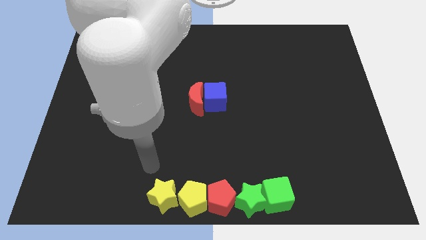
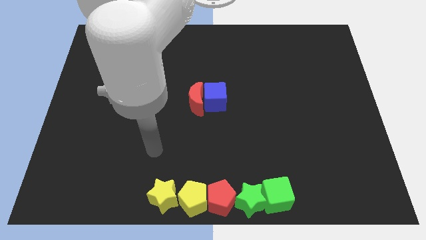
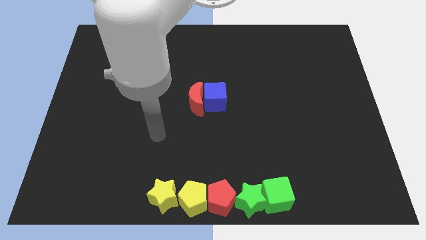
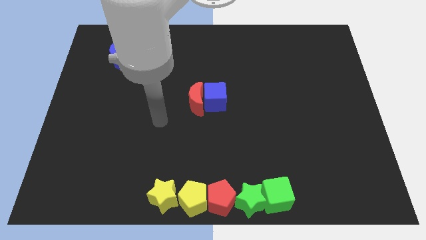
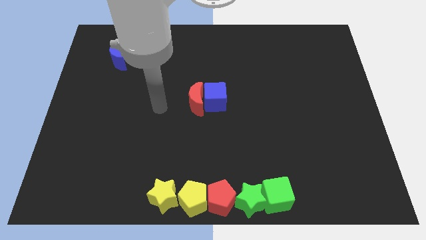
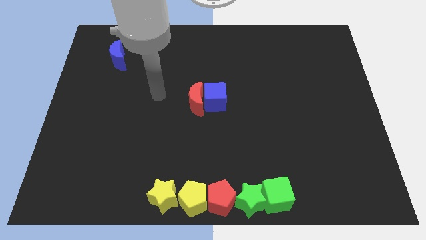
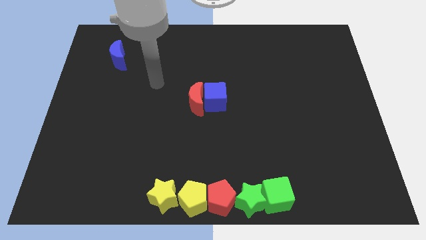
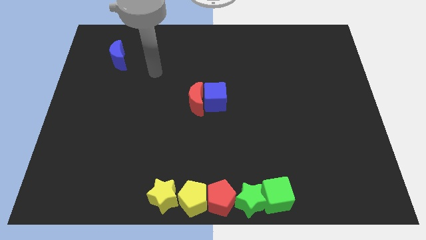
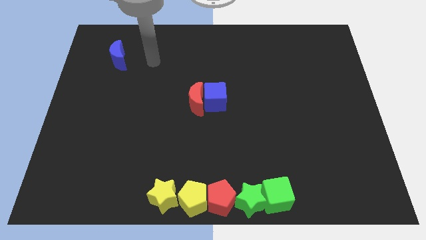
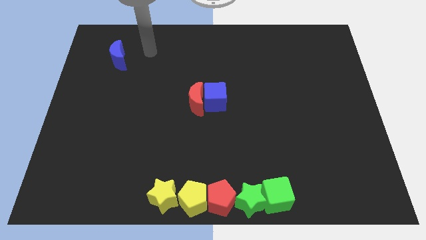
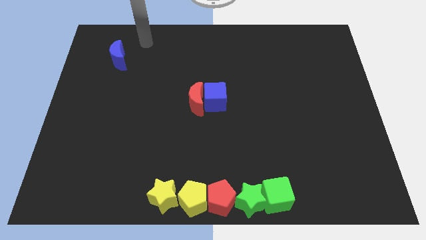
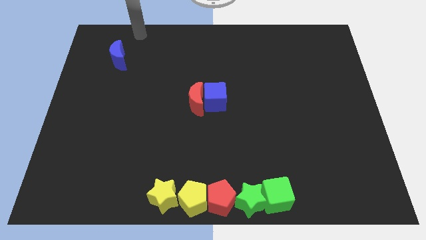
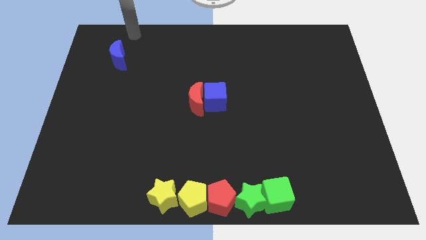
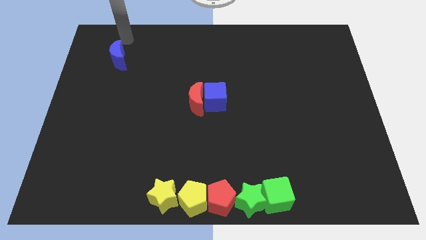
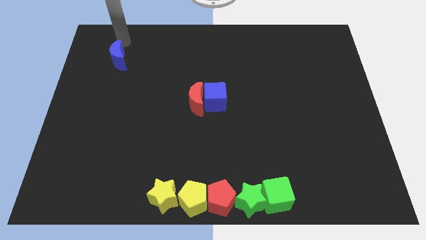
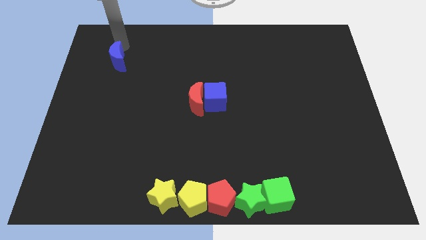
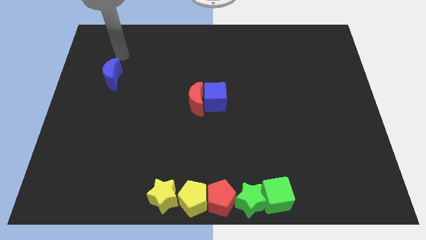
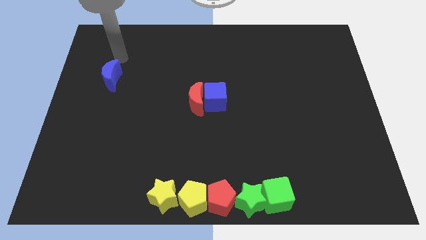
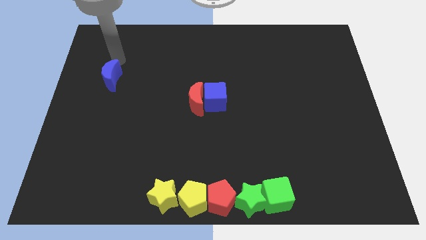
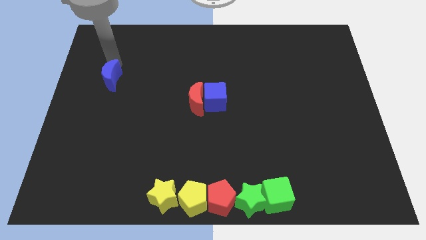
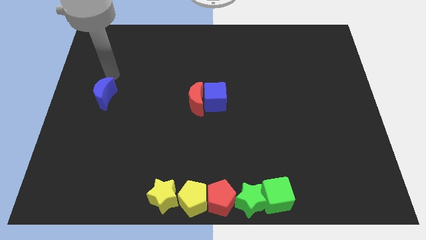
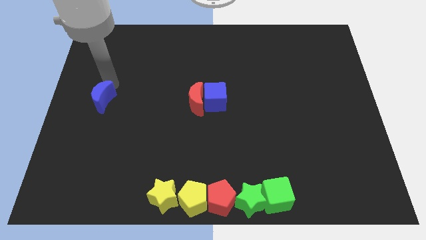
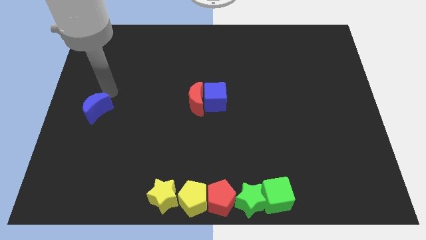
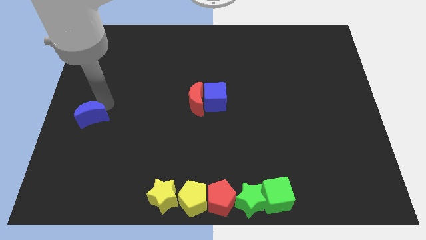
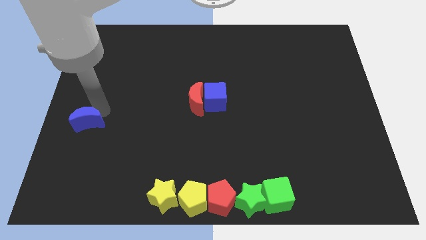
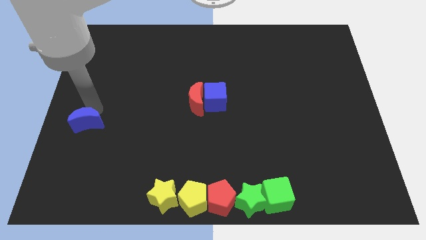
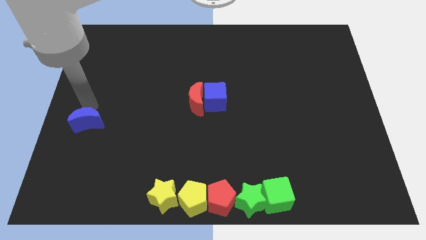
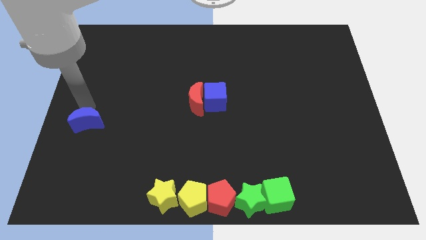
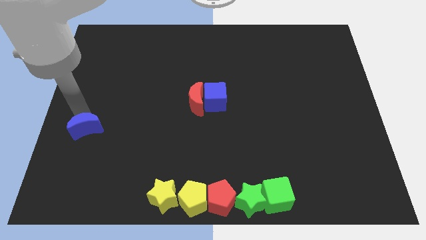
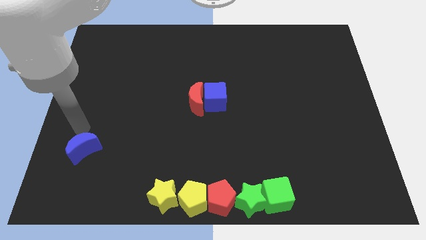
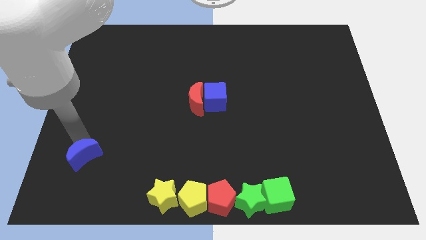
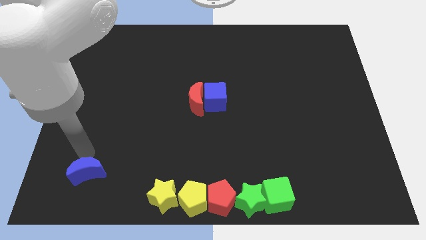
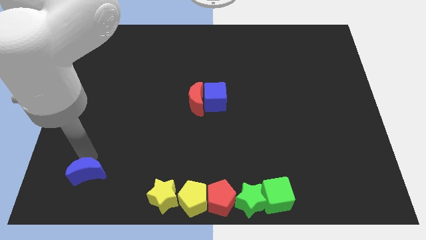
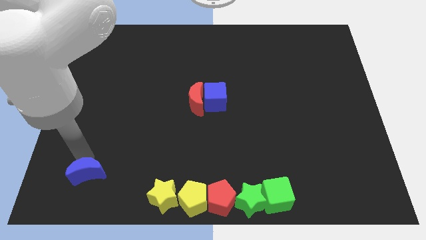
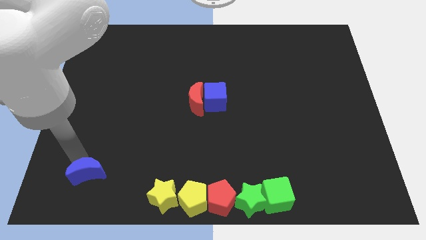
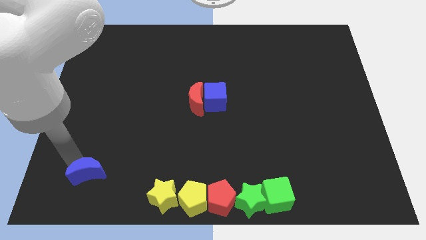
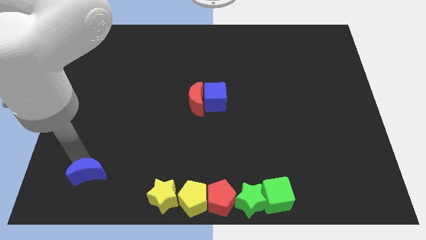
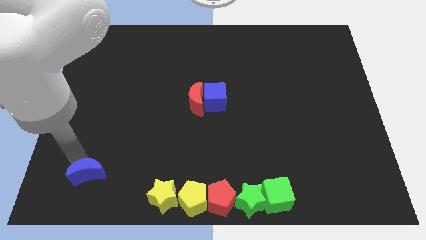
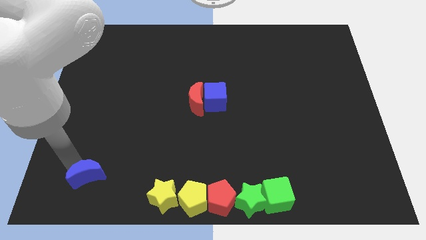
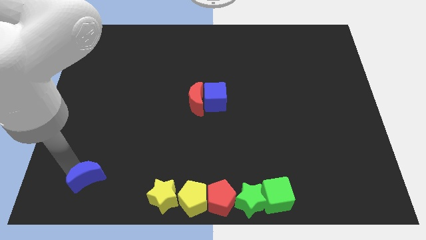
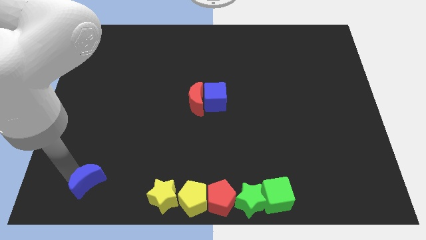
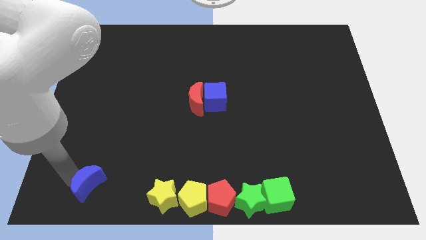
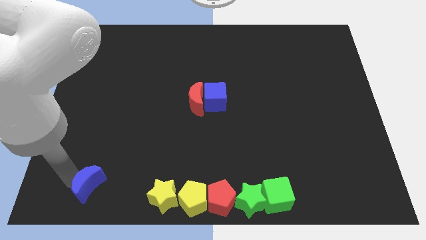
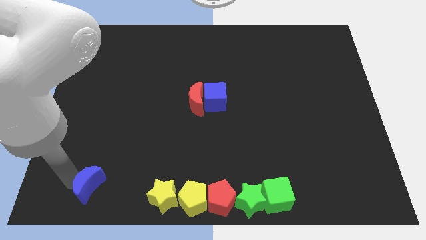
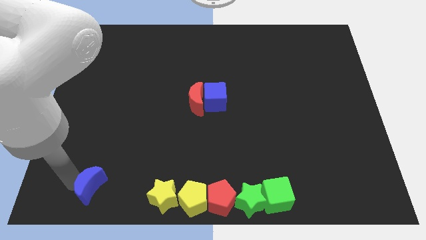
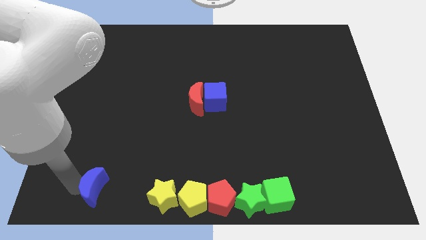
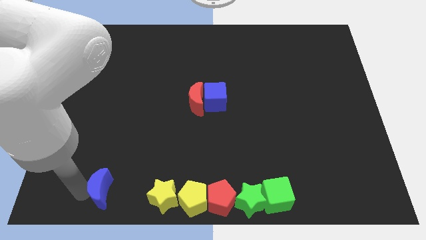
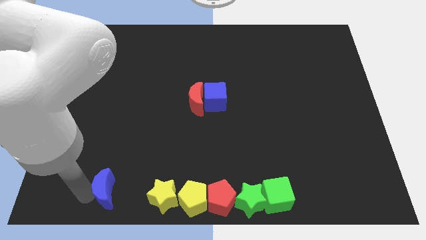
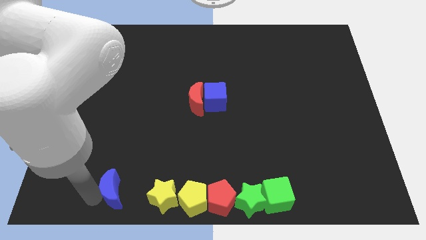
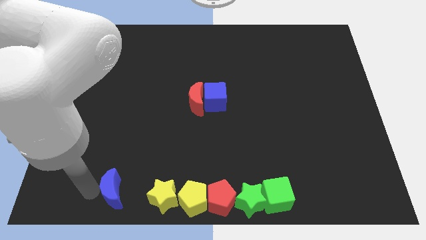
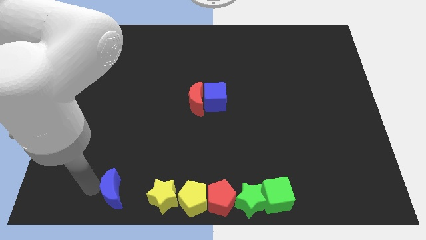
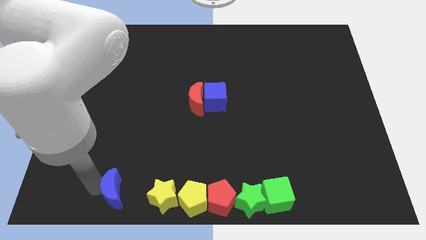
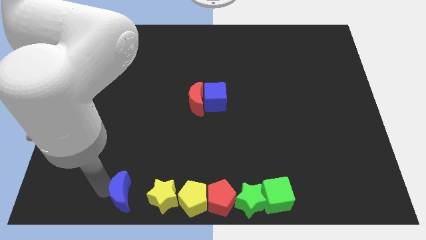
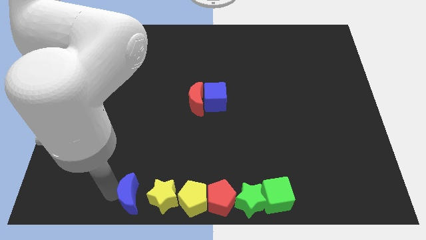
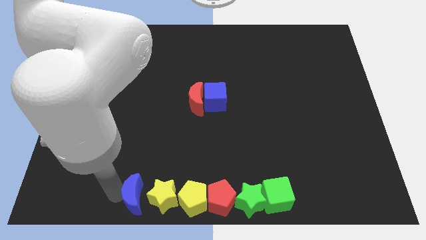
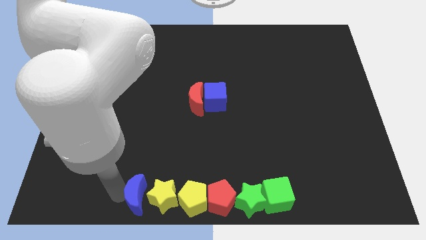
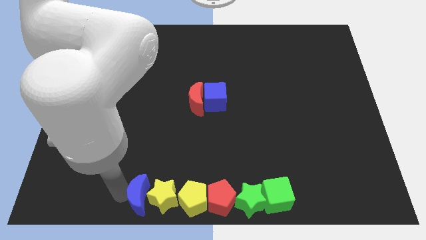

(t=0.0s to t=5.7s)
move the blue crescent to the left of the yellow star

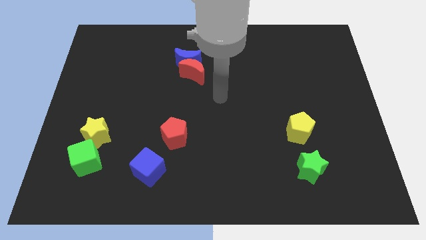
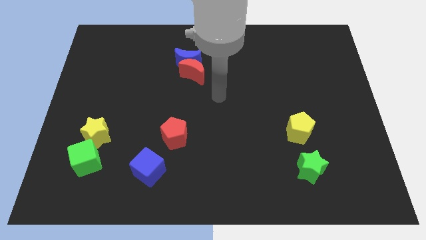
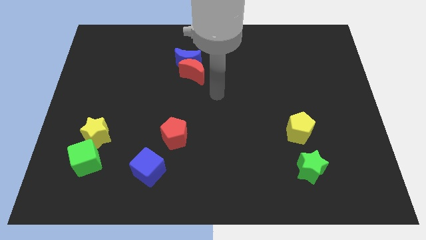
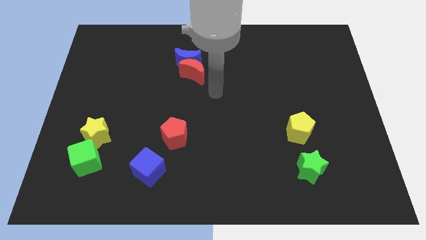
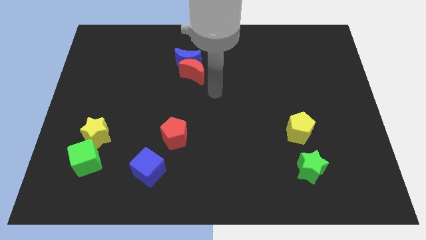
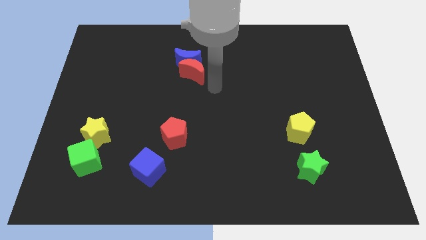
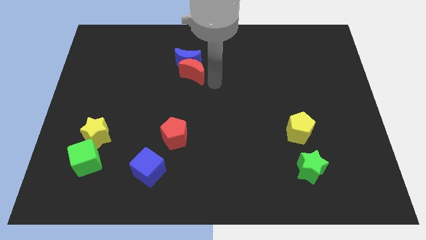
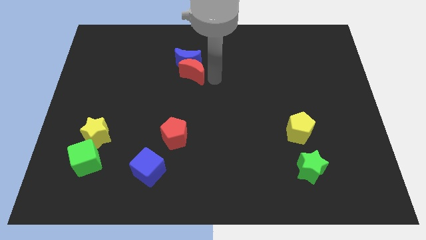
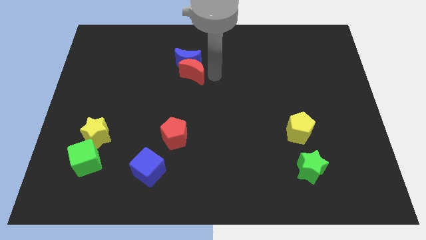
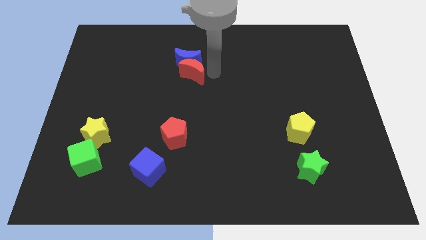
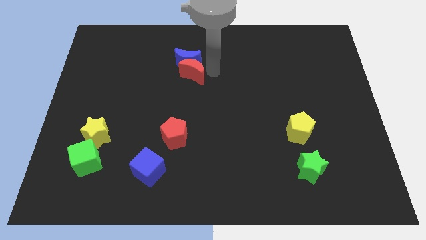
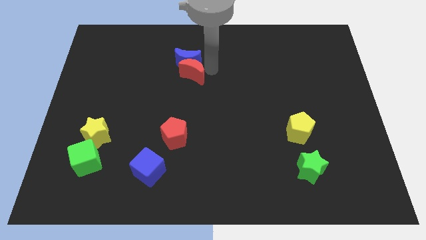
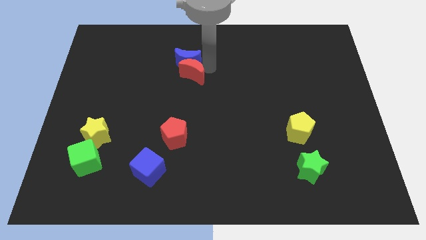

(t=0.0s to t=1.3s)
move your arm towards the blue crescent

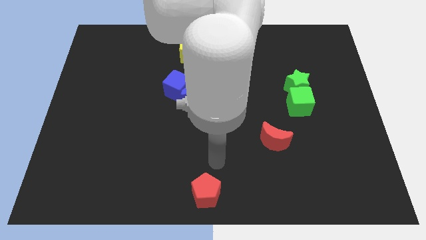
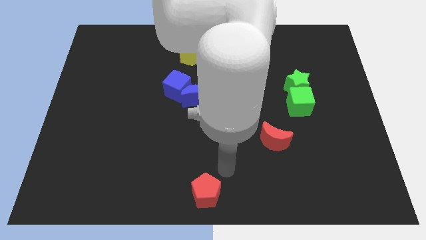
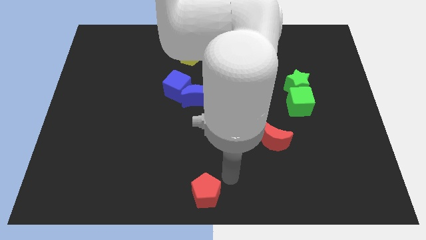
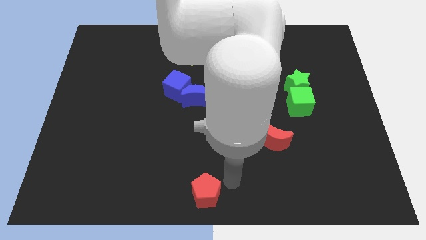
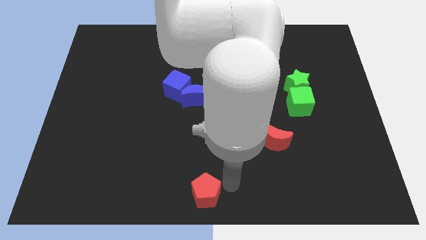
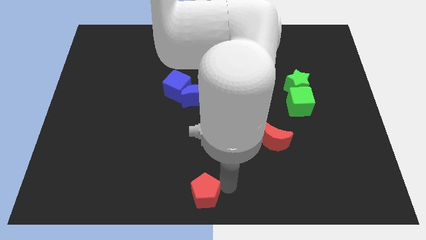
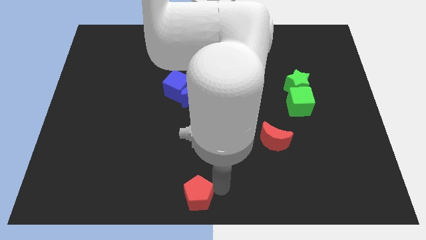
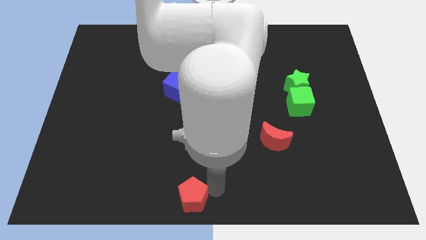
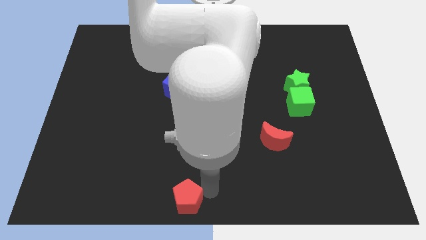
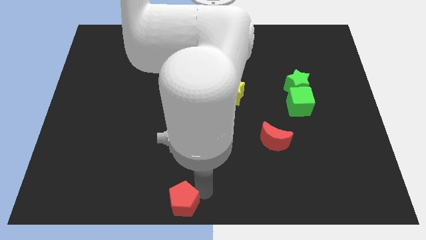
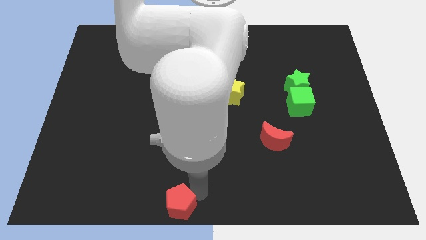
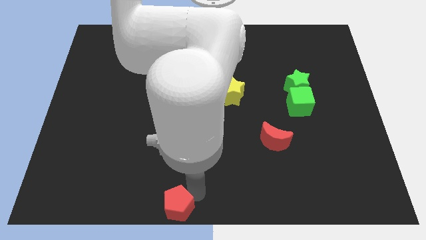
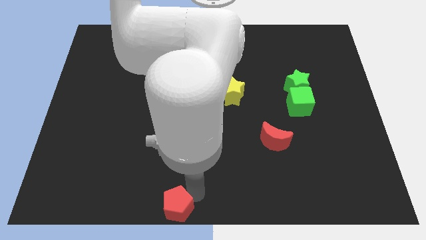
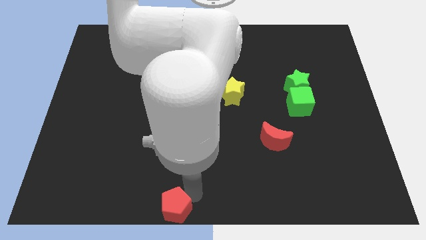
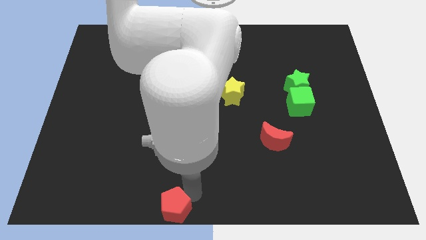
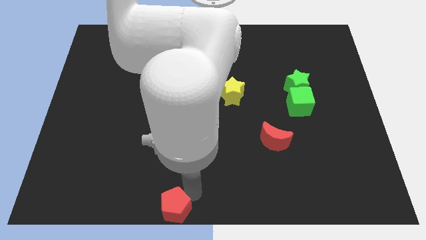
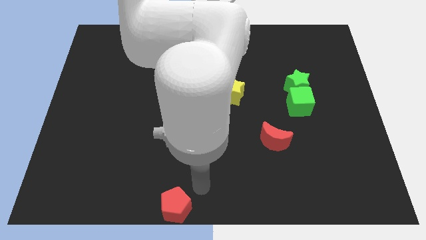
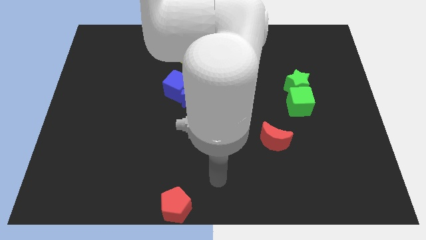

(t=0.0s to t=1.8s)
put the red pentagon vertically at the bottom side of the blue cube

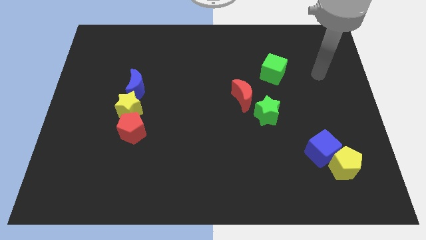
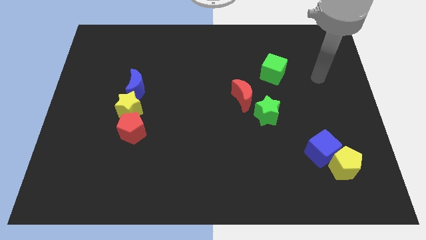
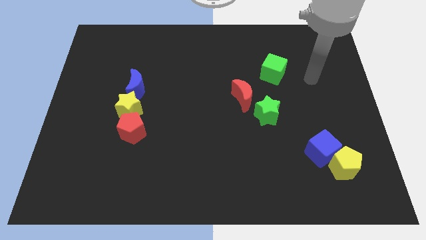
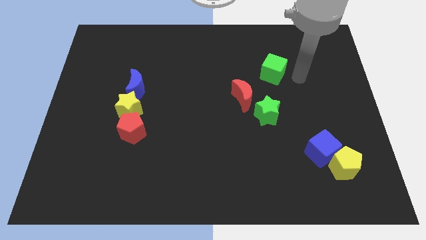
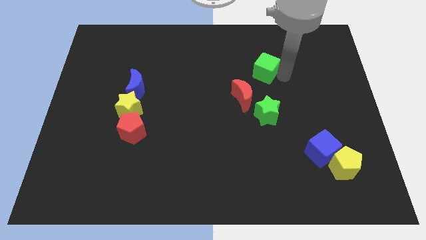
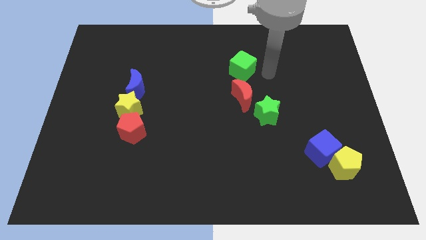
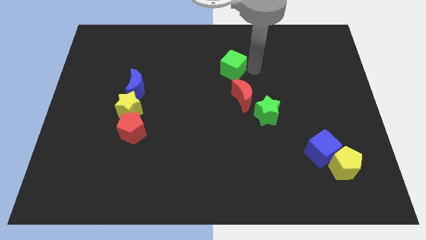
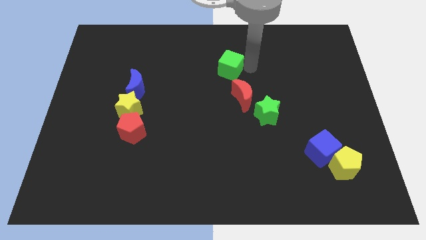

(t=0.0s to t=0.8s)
push the green cube to the top of the red crescent
